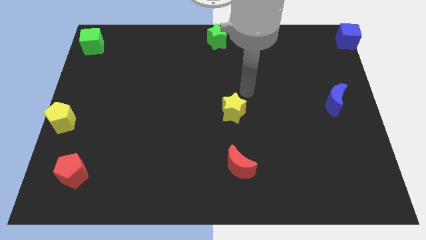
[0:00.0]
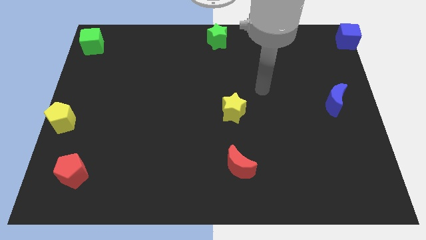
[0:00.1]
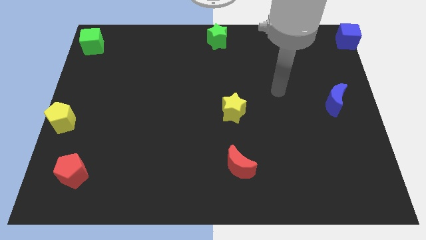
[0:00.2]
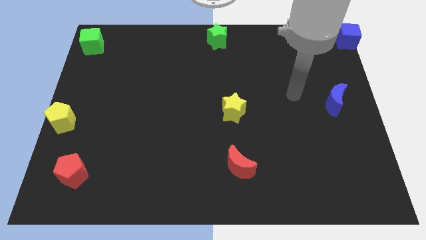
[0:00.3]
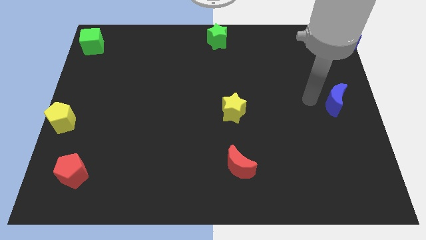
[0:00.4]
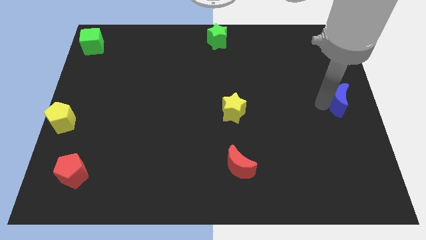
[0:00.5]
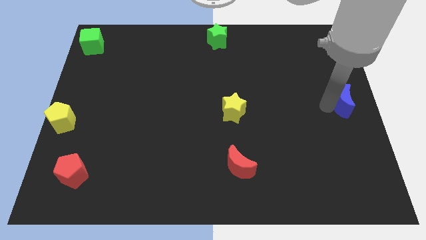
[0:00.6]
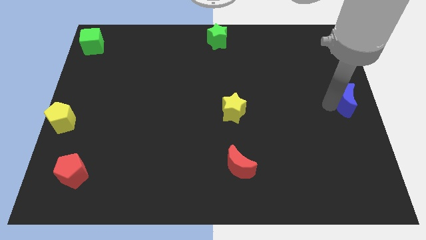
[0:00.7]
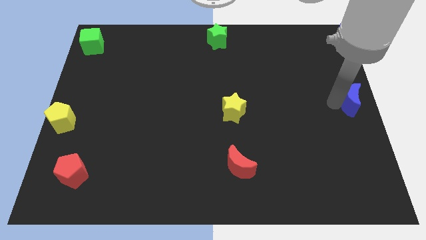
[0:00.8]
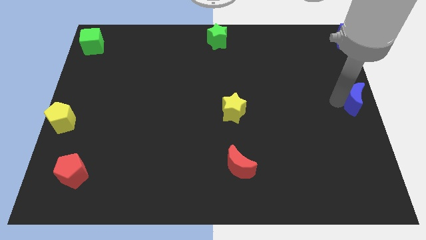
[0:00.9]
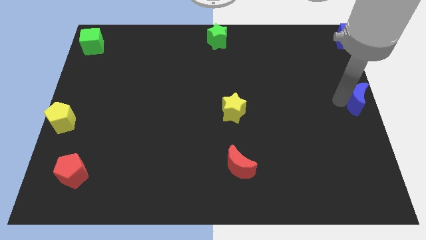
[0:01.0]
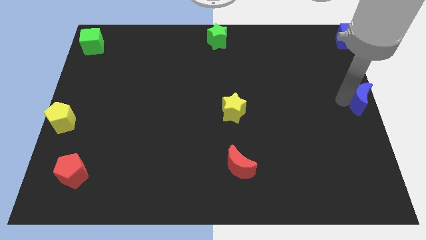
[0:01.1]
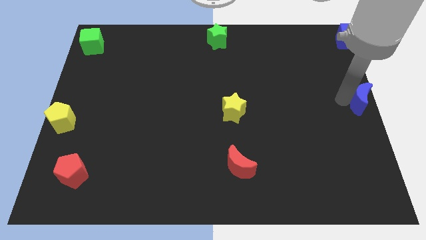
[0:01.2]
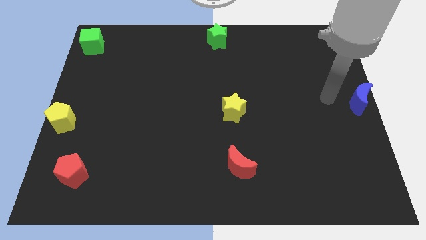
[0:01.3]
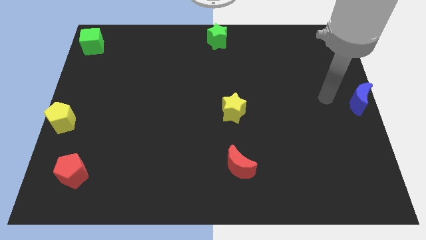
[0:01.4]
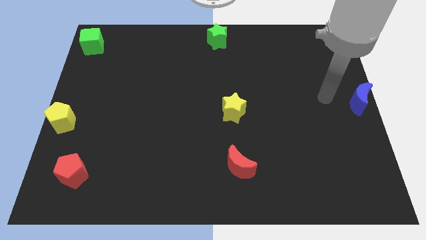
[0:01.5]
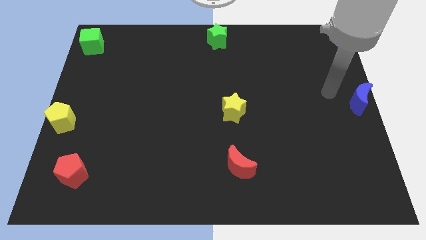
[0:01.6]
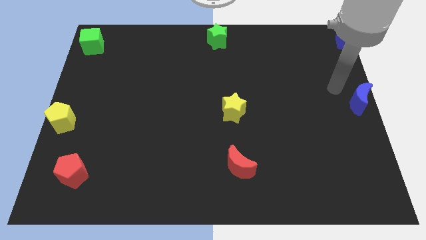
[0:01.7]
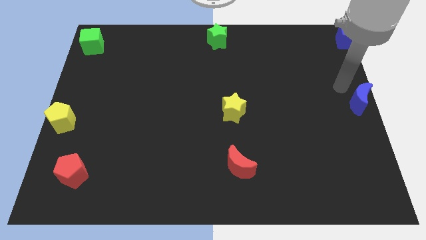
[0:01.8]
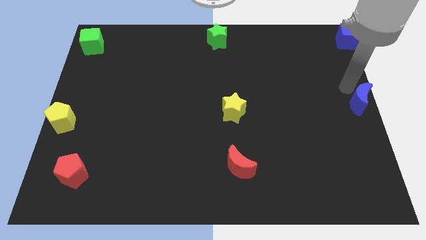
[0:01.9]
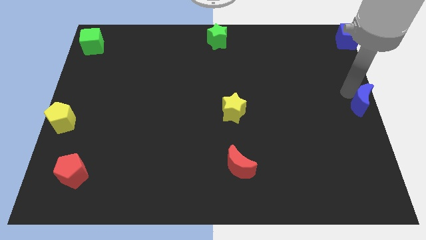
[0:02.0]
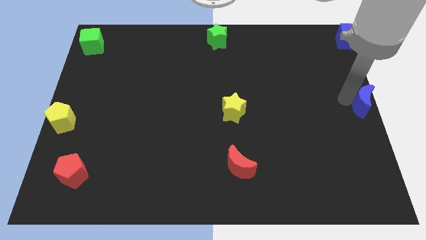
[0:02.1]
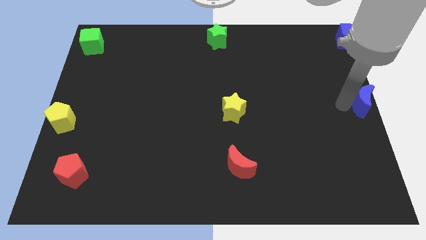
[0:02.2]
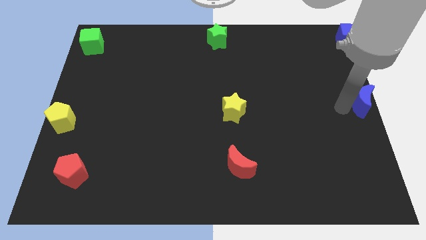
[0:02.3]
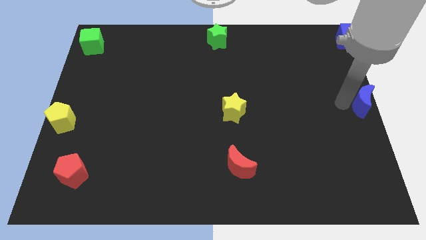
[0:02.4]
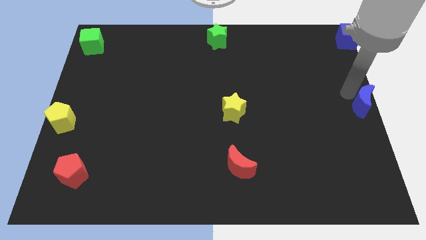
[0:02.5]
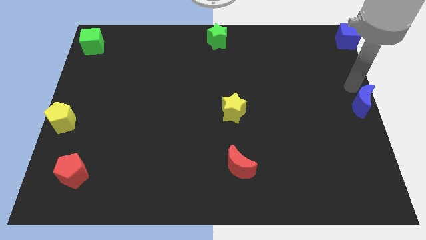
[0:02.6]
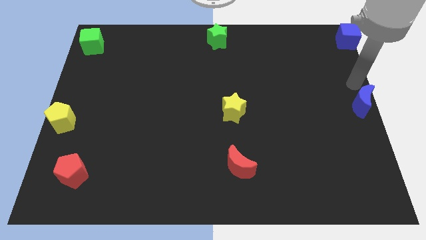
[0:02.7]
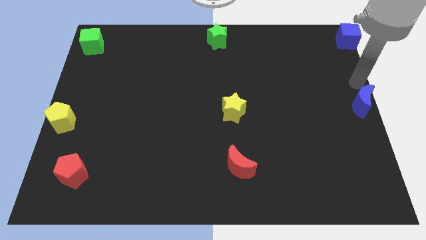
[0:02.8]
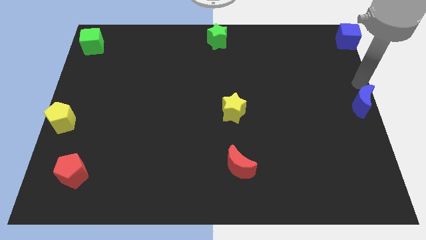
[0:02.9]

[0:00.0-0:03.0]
move the blue crescent slightly to the right

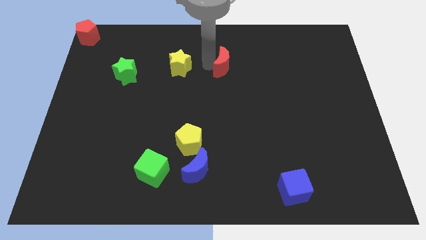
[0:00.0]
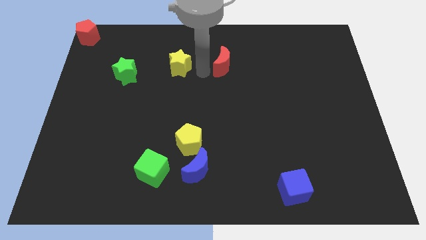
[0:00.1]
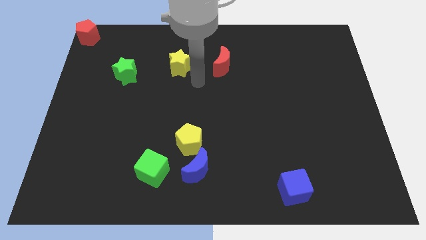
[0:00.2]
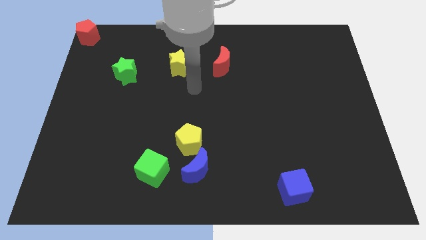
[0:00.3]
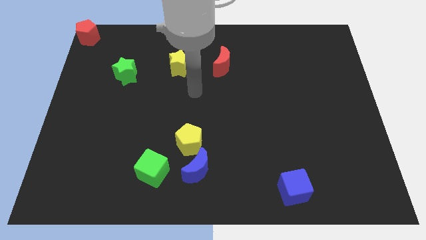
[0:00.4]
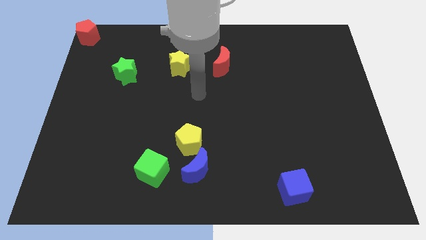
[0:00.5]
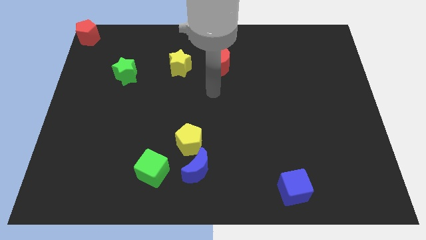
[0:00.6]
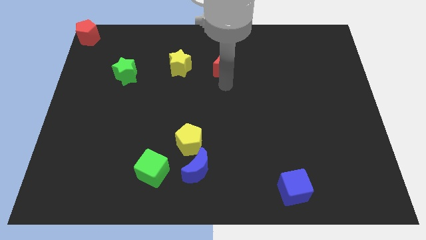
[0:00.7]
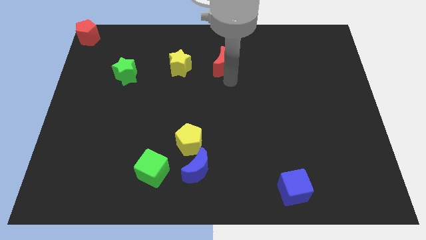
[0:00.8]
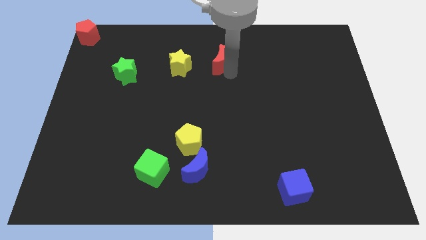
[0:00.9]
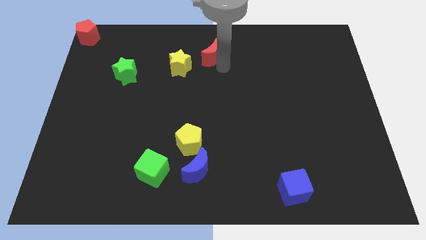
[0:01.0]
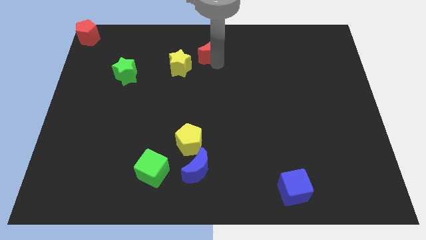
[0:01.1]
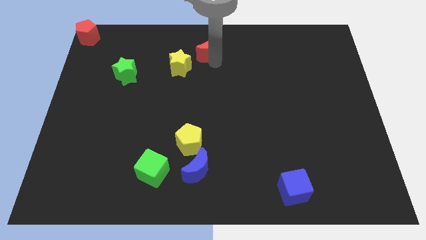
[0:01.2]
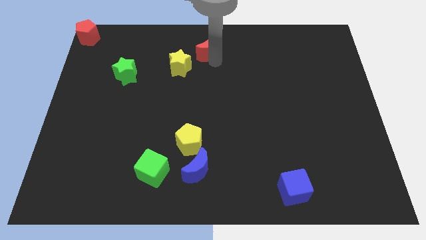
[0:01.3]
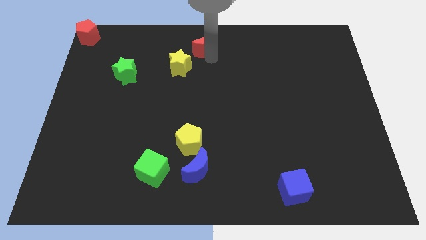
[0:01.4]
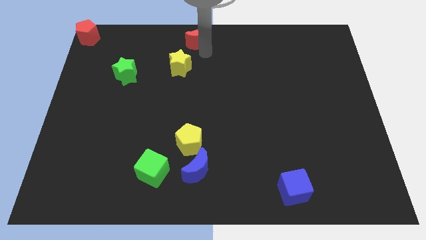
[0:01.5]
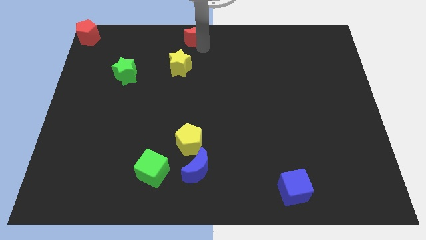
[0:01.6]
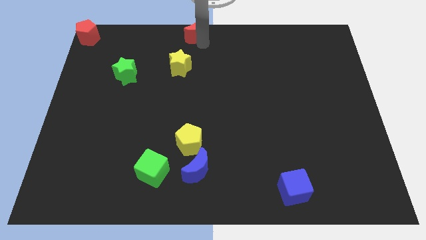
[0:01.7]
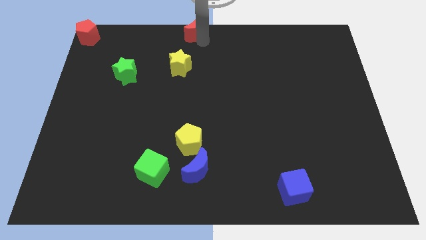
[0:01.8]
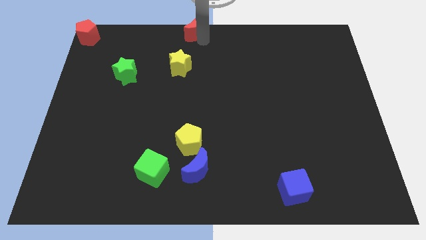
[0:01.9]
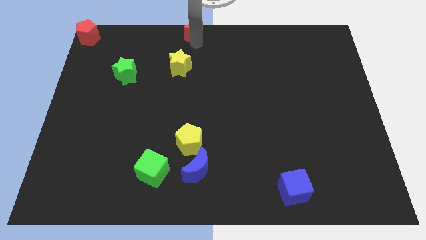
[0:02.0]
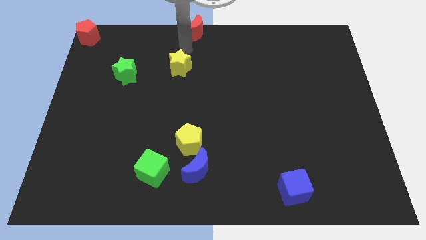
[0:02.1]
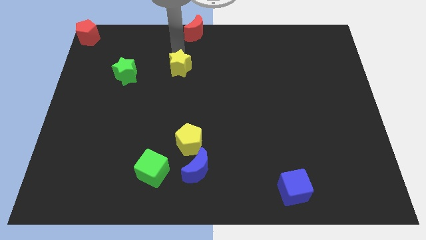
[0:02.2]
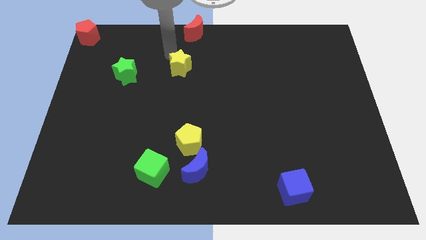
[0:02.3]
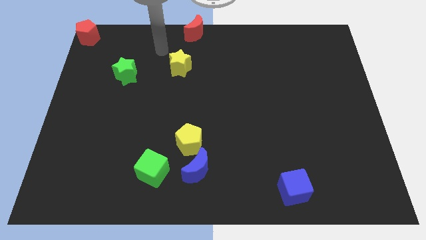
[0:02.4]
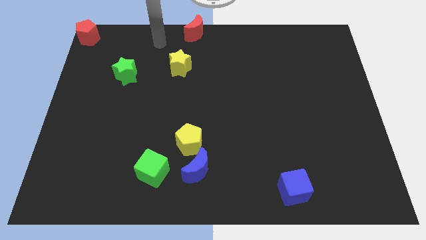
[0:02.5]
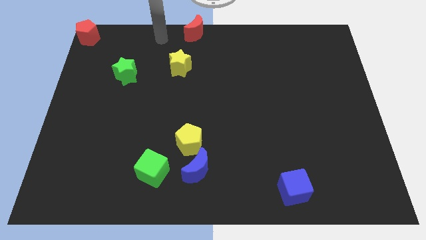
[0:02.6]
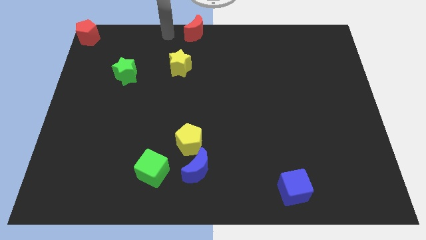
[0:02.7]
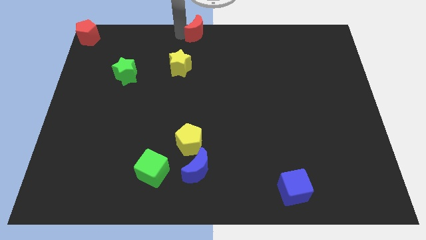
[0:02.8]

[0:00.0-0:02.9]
move red moon above yellow star

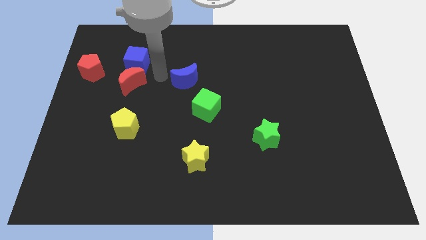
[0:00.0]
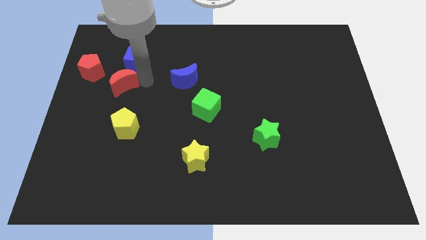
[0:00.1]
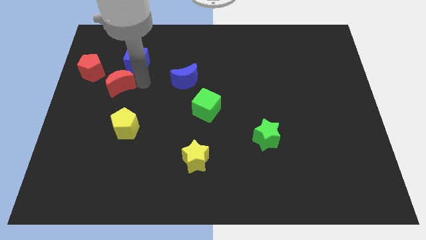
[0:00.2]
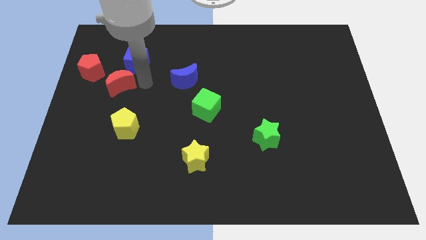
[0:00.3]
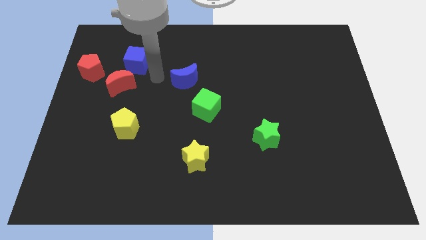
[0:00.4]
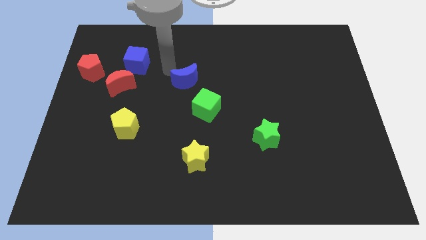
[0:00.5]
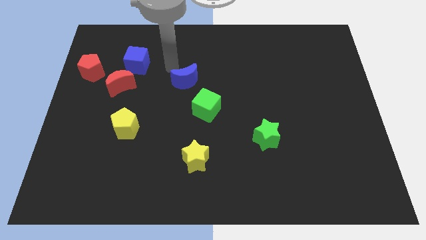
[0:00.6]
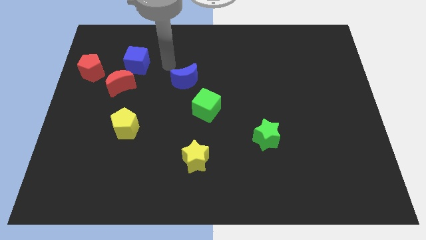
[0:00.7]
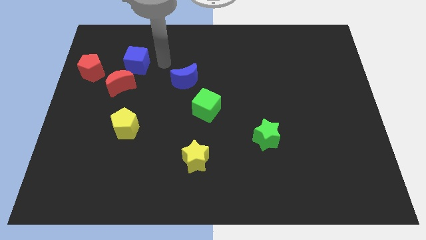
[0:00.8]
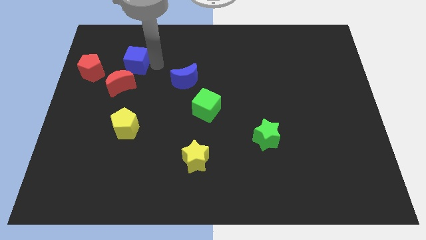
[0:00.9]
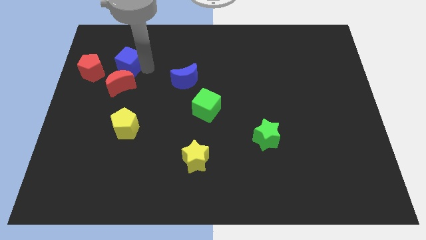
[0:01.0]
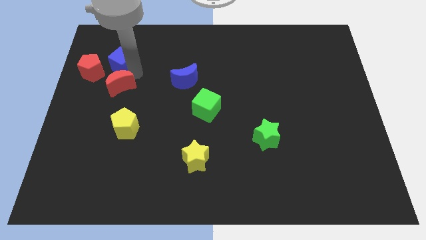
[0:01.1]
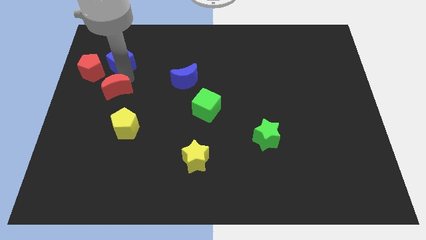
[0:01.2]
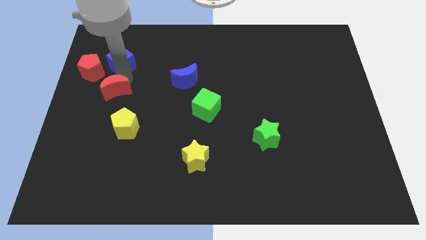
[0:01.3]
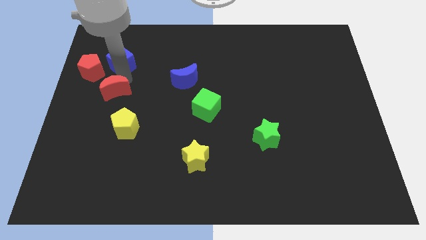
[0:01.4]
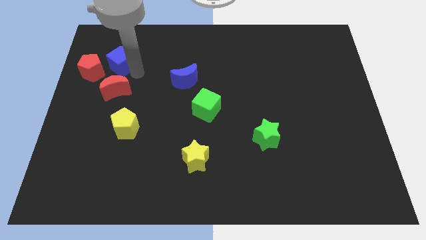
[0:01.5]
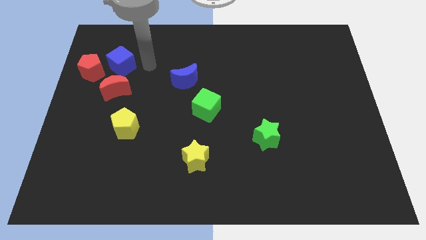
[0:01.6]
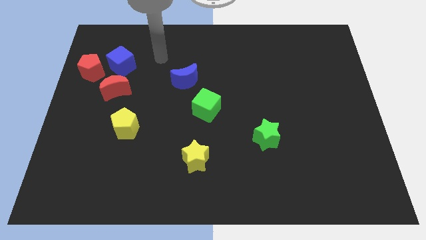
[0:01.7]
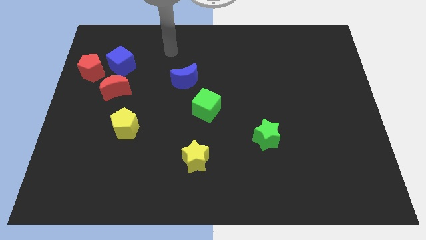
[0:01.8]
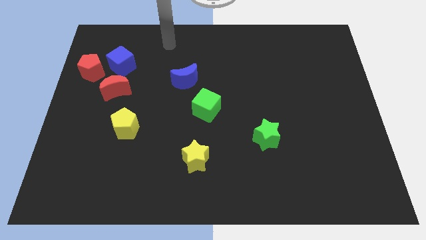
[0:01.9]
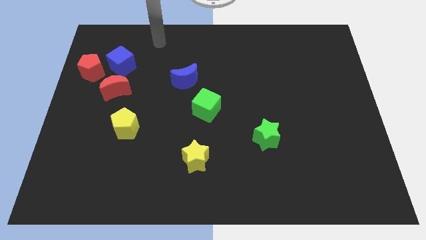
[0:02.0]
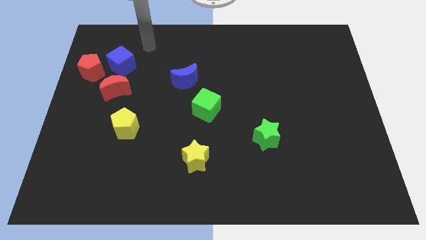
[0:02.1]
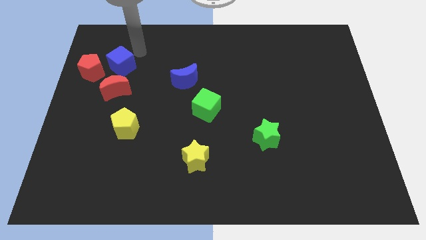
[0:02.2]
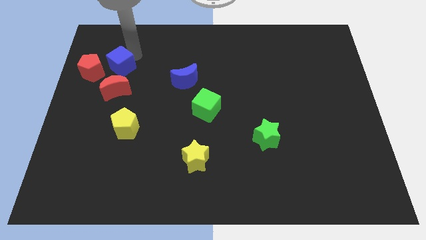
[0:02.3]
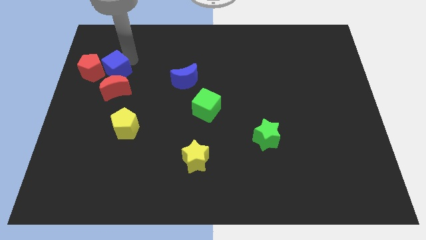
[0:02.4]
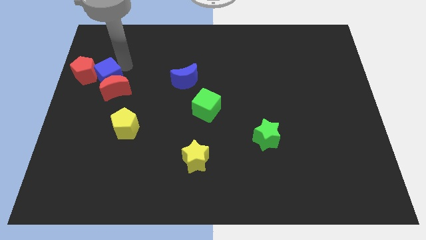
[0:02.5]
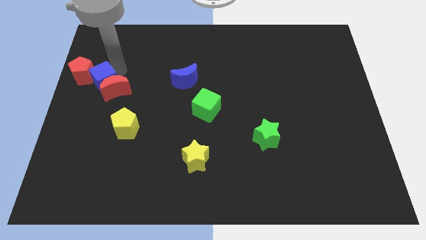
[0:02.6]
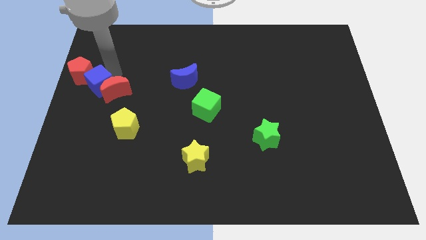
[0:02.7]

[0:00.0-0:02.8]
place the blue cube between the red moon and red pentagon

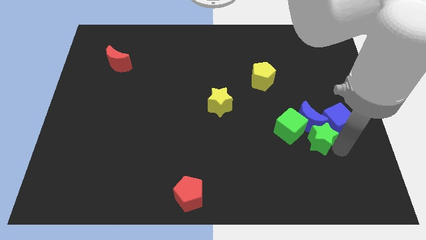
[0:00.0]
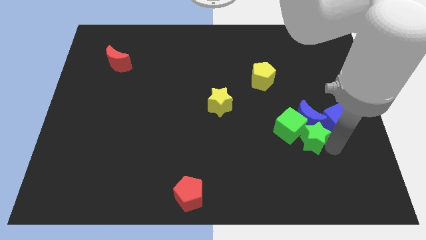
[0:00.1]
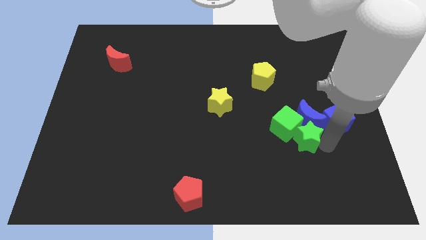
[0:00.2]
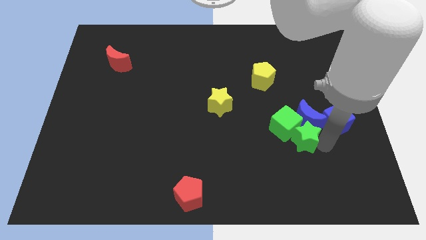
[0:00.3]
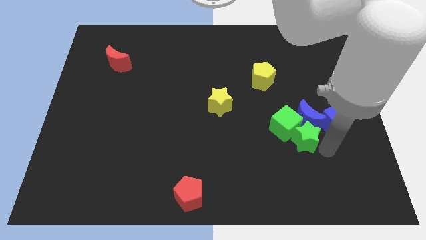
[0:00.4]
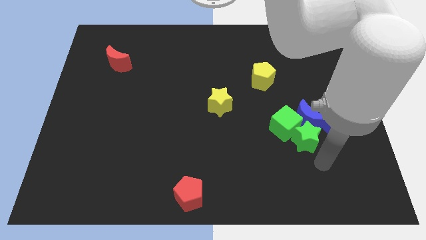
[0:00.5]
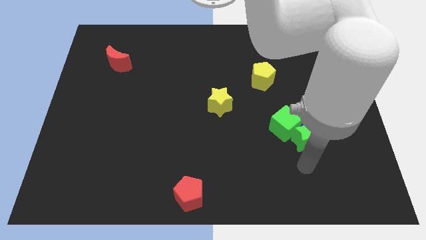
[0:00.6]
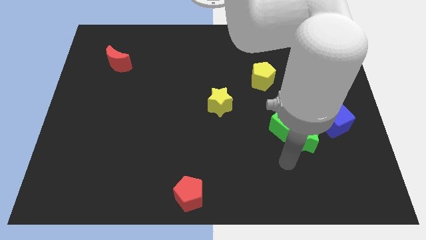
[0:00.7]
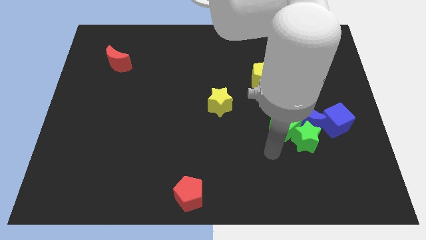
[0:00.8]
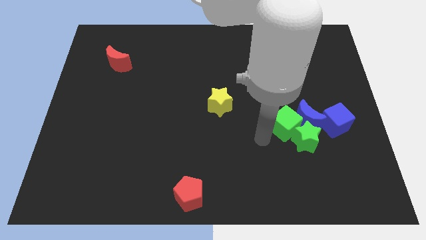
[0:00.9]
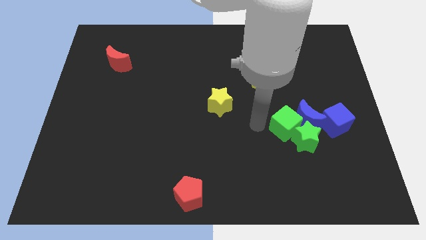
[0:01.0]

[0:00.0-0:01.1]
push green star into the green cube
